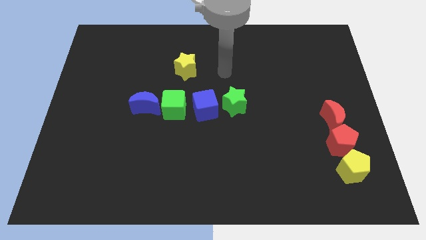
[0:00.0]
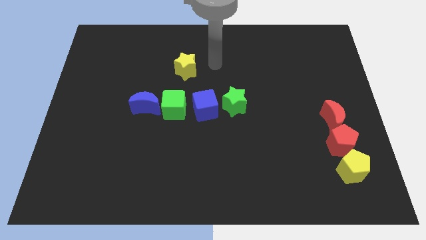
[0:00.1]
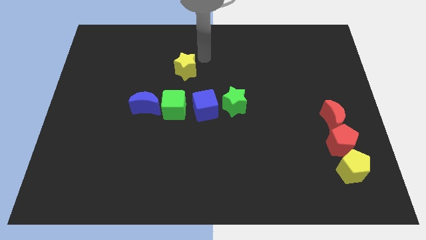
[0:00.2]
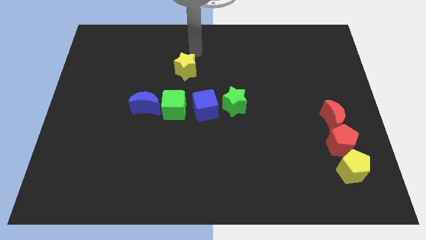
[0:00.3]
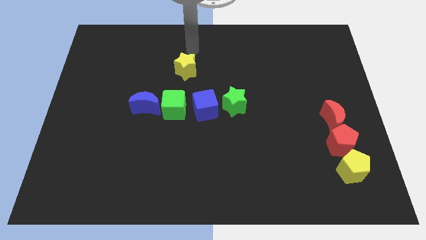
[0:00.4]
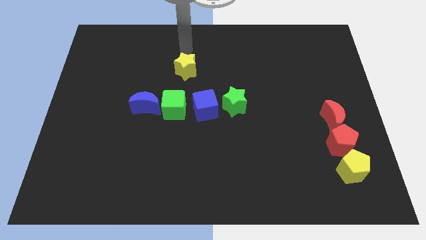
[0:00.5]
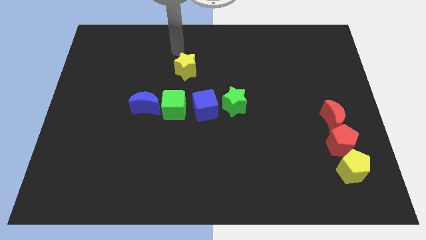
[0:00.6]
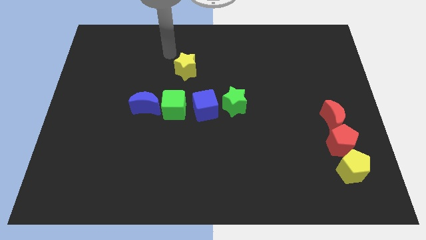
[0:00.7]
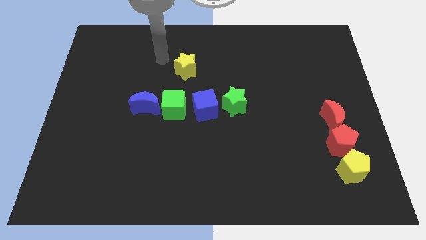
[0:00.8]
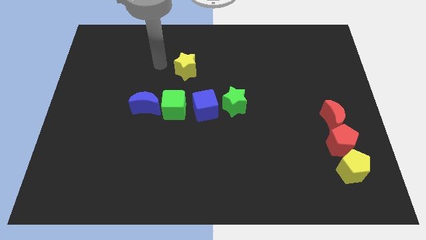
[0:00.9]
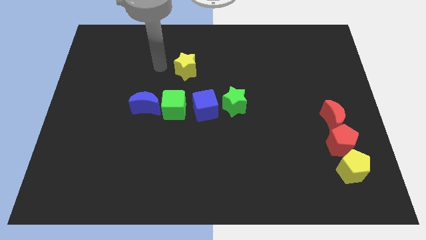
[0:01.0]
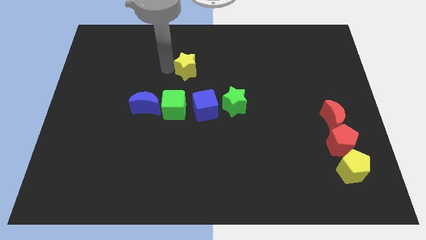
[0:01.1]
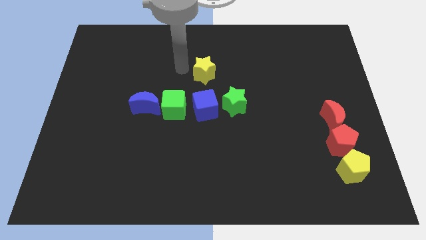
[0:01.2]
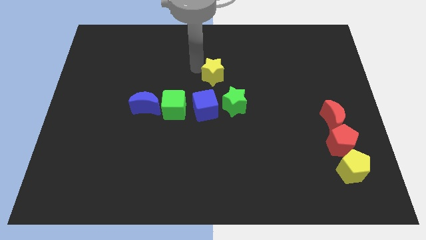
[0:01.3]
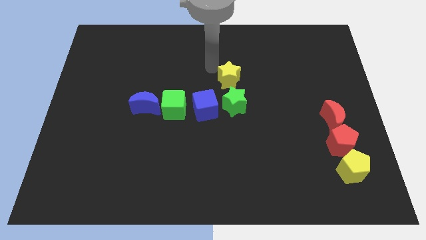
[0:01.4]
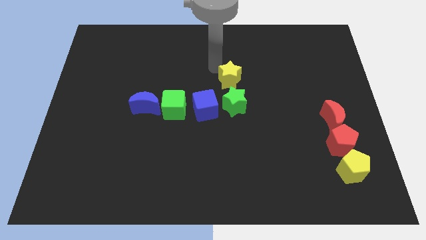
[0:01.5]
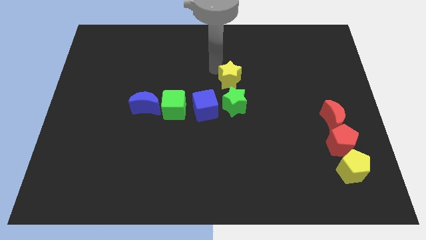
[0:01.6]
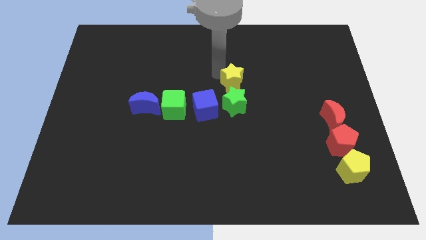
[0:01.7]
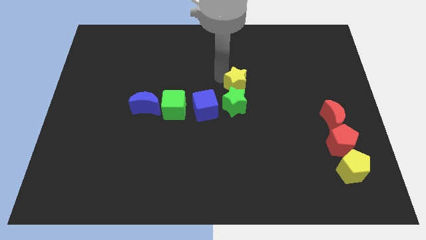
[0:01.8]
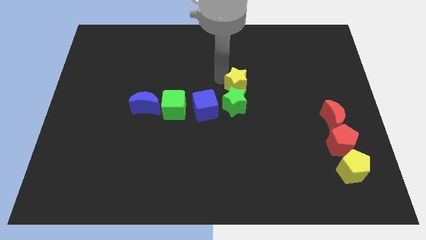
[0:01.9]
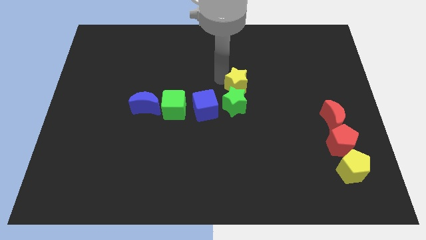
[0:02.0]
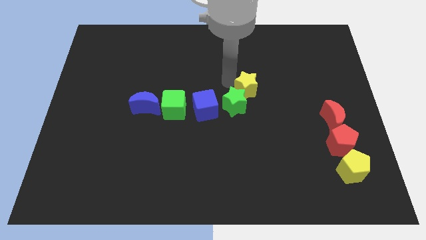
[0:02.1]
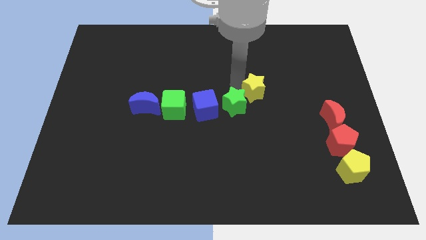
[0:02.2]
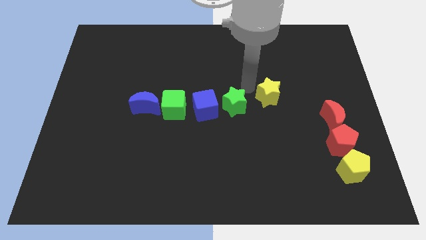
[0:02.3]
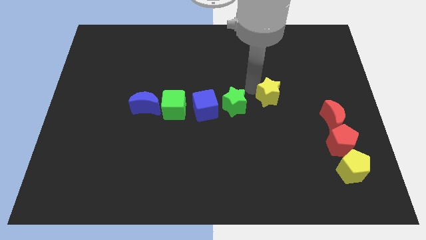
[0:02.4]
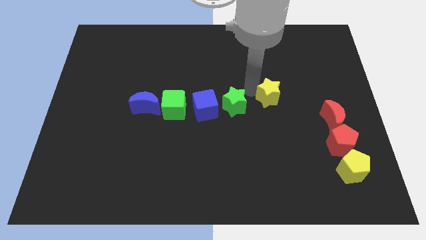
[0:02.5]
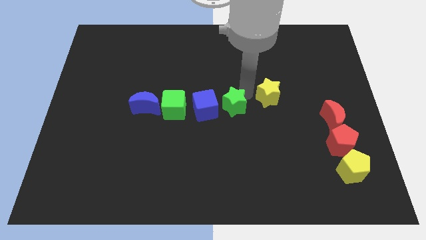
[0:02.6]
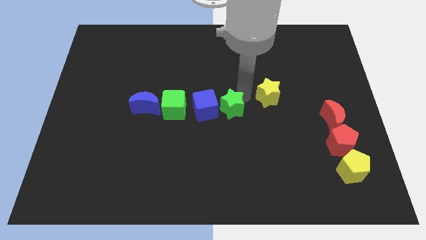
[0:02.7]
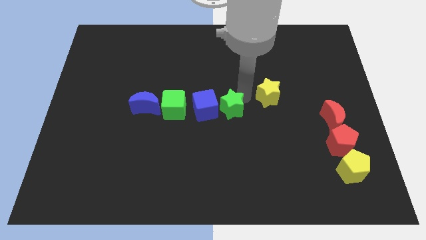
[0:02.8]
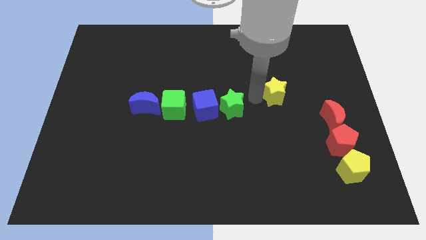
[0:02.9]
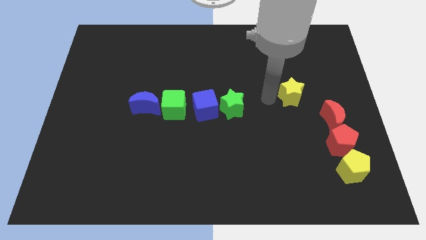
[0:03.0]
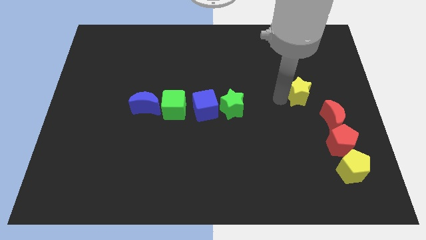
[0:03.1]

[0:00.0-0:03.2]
move the yellow star towards red crescent

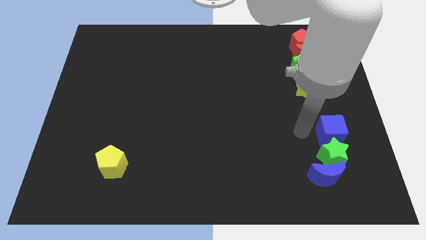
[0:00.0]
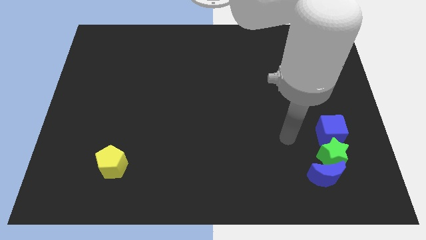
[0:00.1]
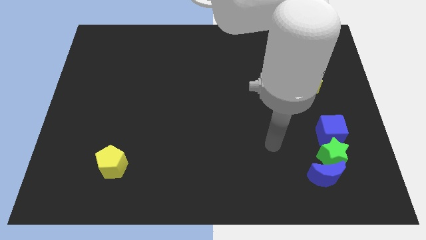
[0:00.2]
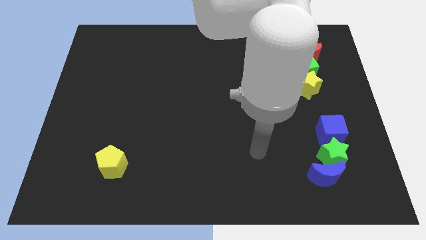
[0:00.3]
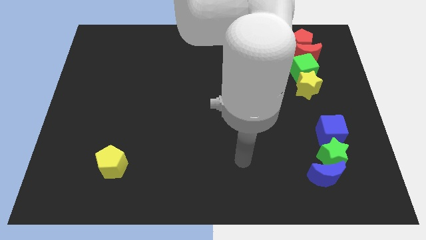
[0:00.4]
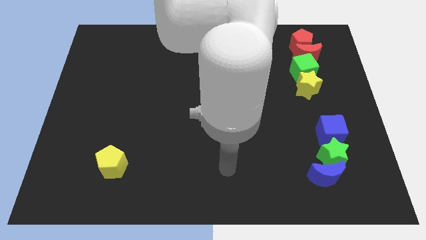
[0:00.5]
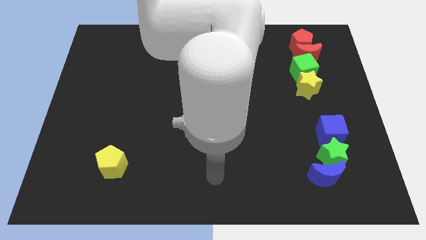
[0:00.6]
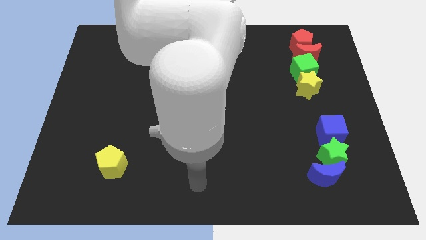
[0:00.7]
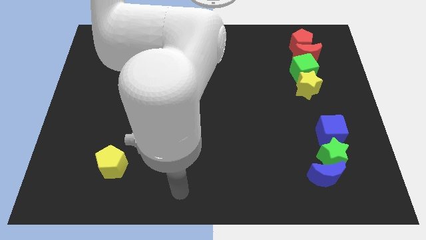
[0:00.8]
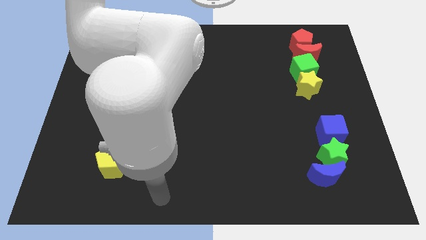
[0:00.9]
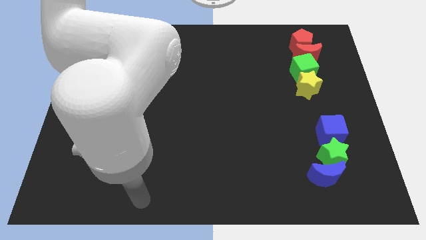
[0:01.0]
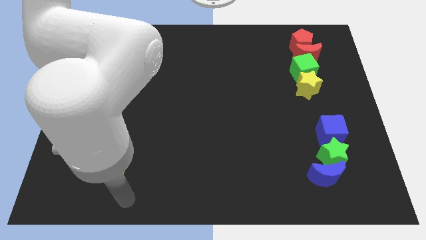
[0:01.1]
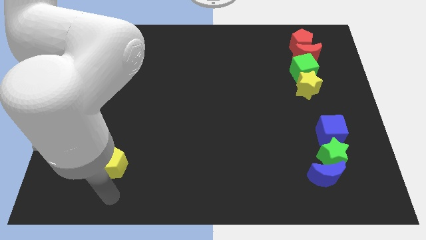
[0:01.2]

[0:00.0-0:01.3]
point your hand below the yellow pentagon

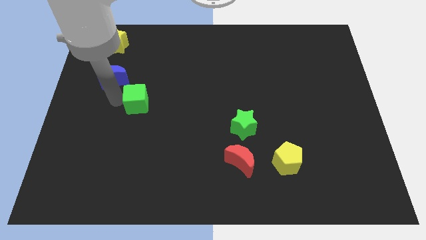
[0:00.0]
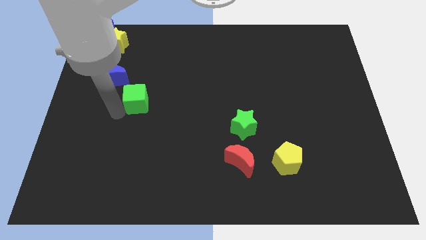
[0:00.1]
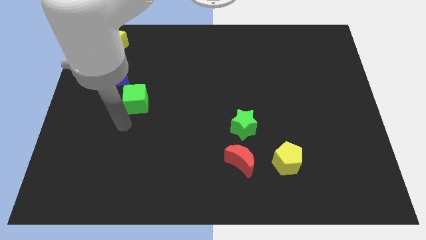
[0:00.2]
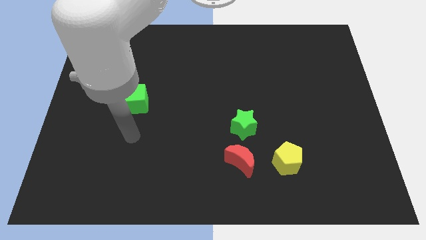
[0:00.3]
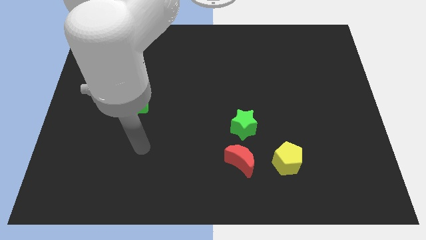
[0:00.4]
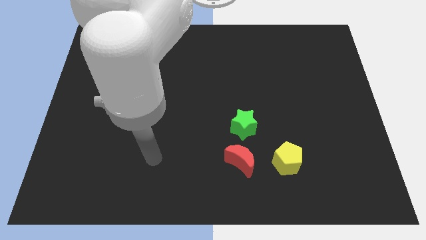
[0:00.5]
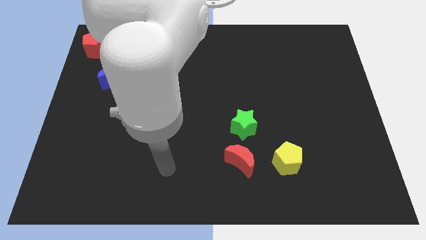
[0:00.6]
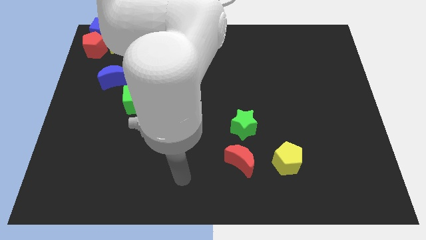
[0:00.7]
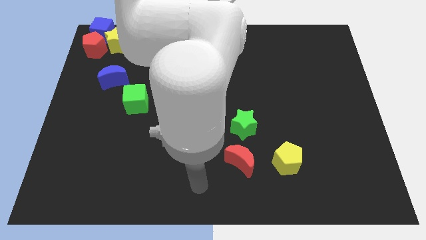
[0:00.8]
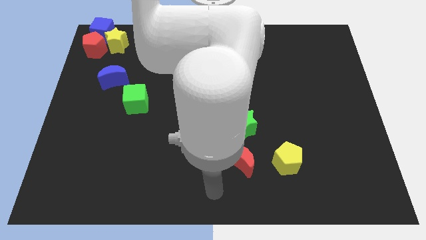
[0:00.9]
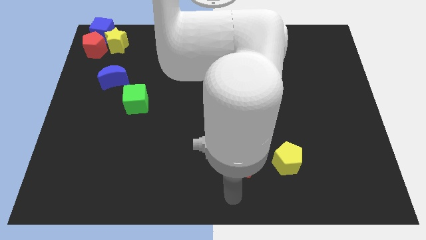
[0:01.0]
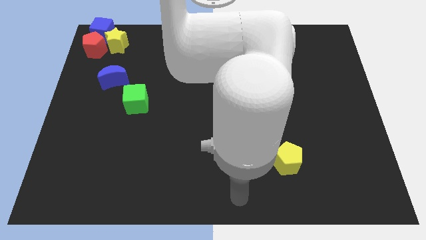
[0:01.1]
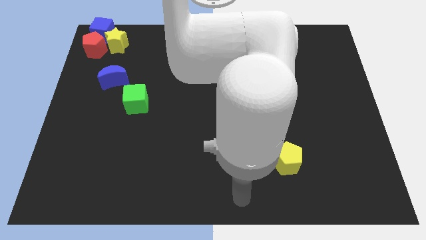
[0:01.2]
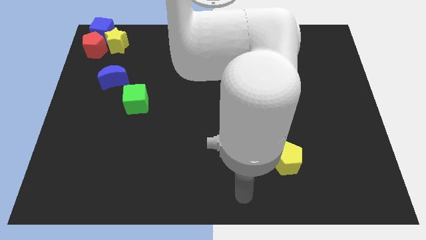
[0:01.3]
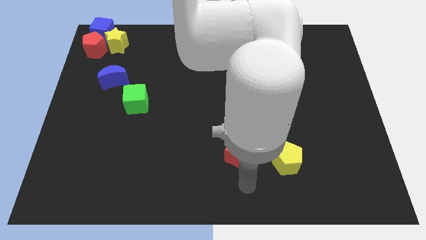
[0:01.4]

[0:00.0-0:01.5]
move the arm at the bottom of the red moon

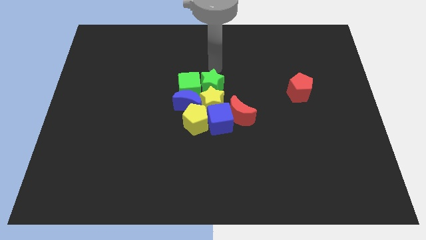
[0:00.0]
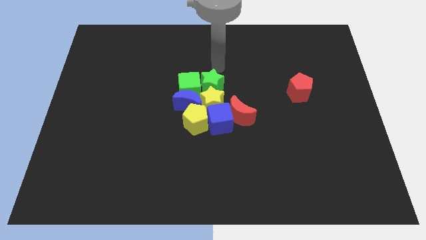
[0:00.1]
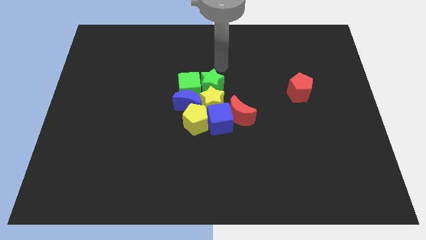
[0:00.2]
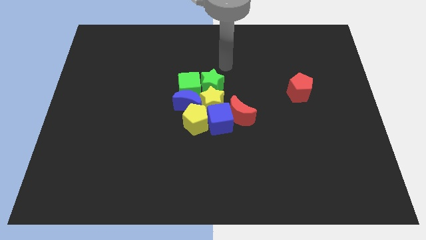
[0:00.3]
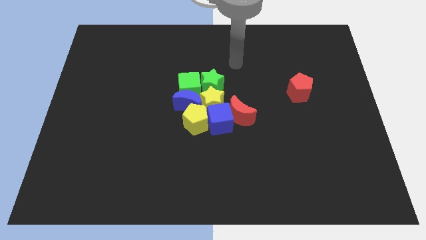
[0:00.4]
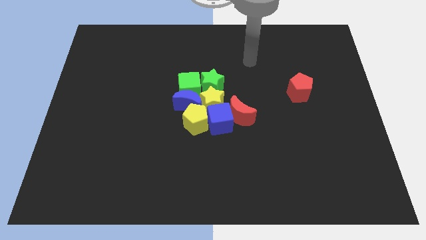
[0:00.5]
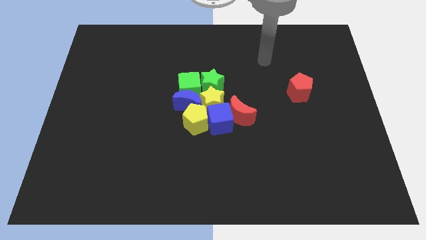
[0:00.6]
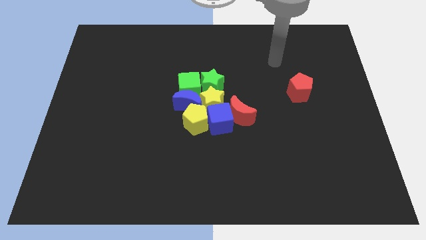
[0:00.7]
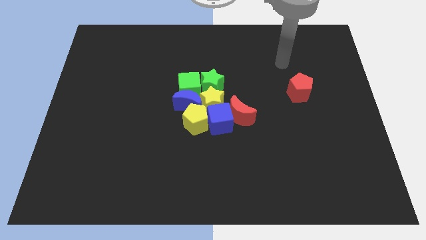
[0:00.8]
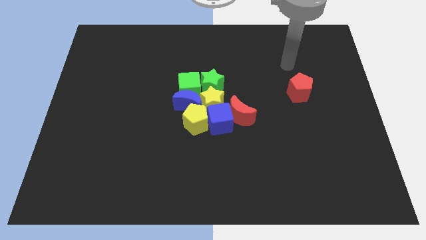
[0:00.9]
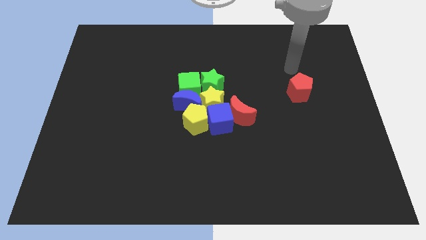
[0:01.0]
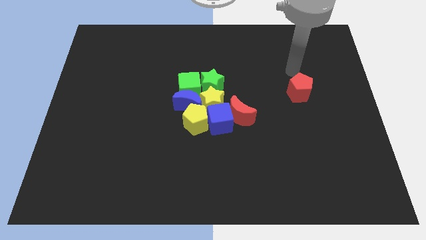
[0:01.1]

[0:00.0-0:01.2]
move your arm to the top of the red pentagon

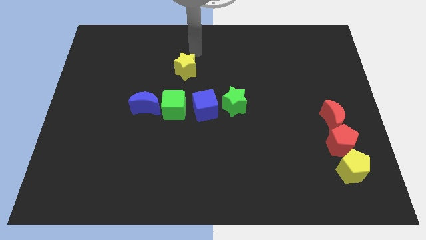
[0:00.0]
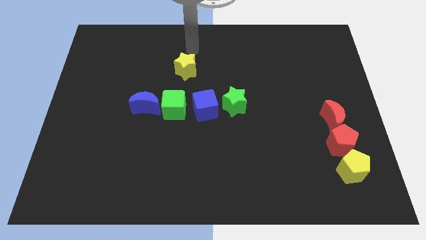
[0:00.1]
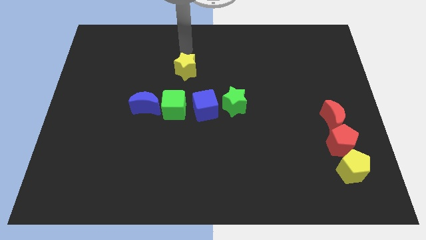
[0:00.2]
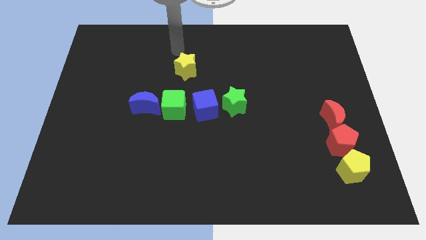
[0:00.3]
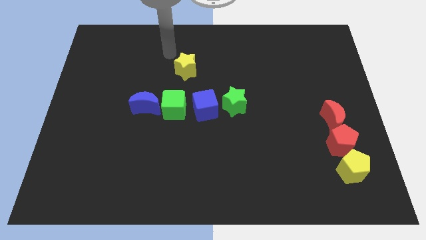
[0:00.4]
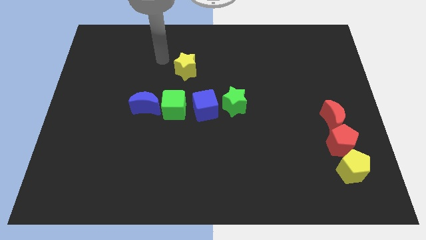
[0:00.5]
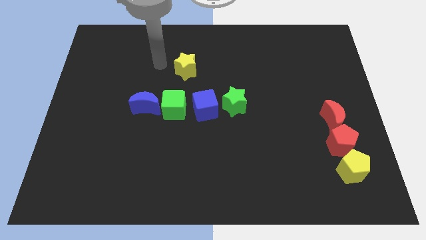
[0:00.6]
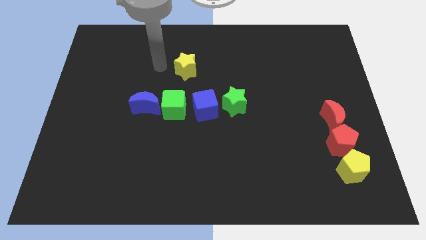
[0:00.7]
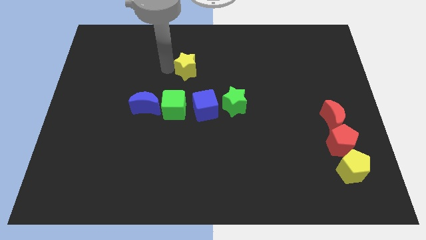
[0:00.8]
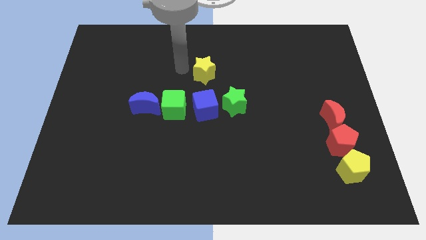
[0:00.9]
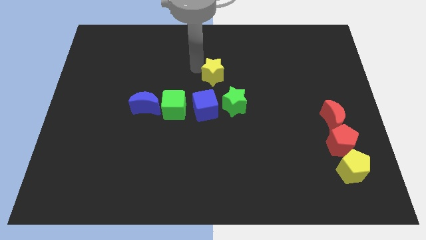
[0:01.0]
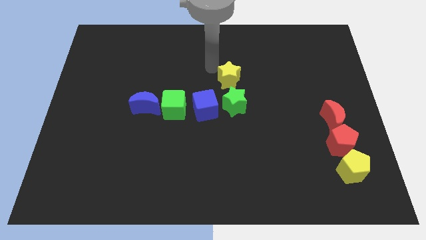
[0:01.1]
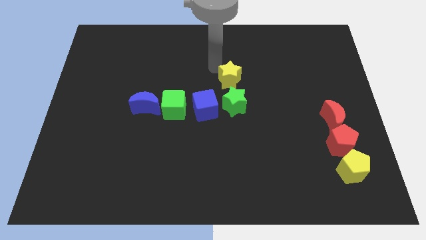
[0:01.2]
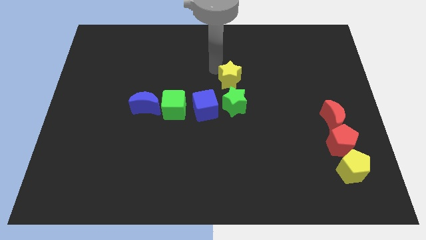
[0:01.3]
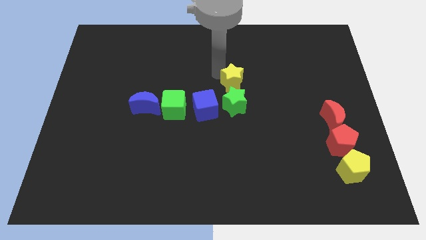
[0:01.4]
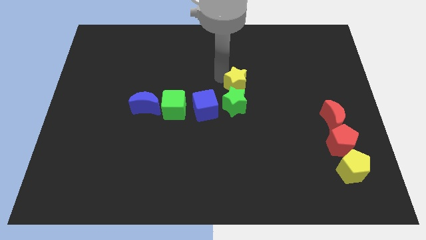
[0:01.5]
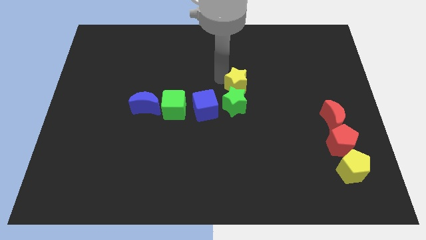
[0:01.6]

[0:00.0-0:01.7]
slide the yellow star towards the top side of the green star
